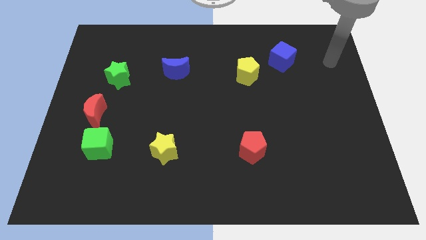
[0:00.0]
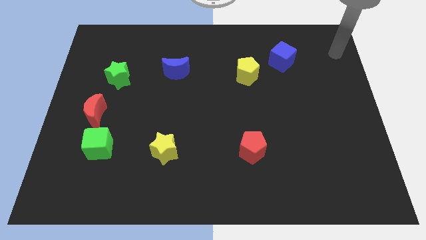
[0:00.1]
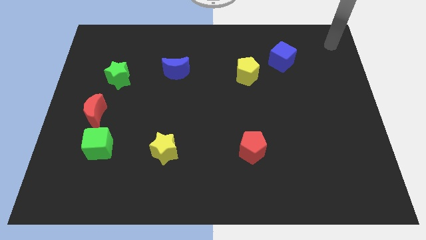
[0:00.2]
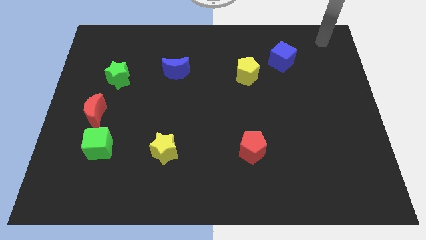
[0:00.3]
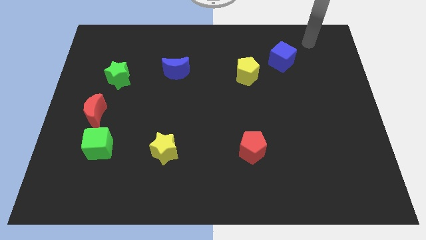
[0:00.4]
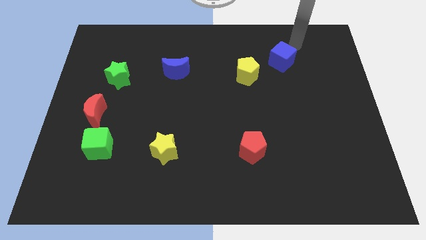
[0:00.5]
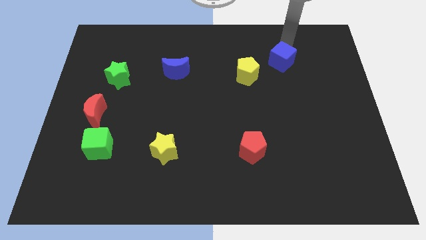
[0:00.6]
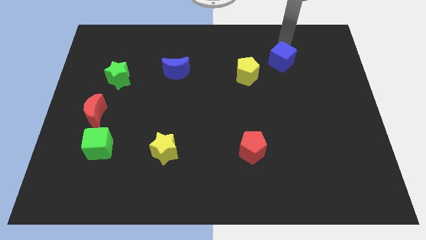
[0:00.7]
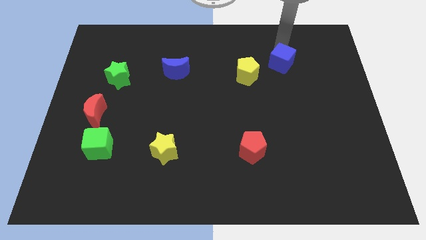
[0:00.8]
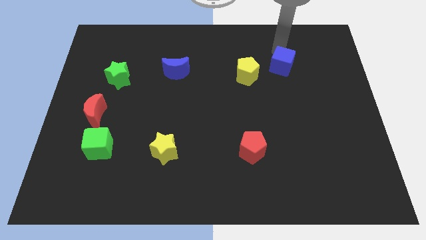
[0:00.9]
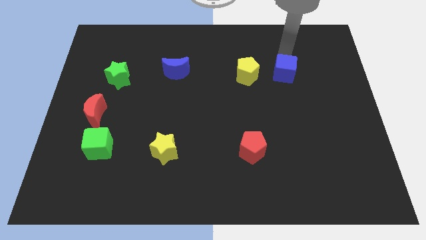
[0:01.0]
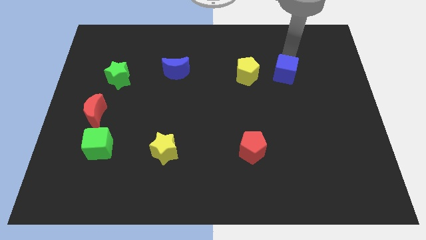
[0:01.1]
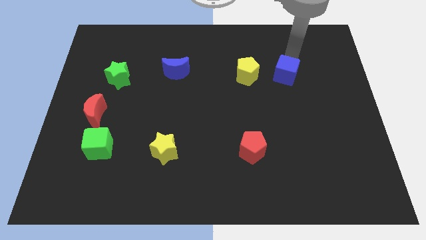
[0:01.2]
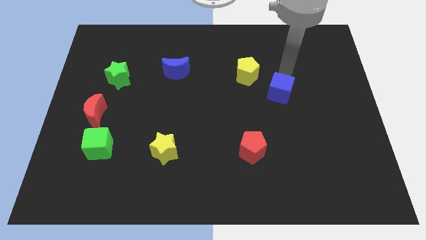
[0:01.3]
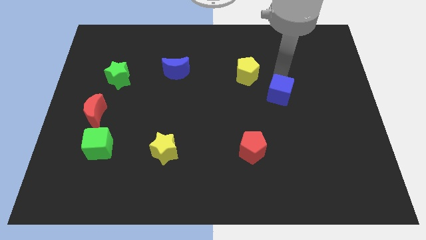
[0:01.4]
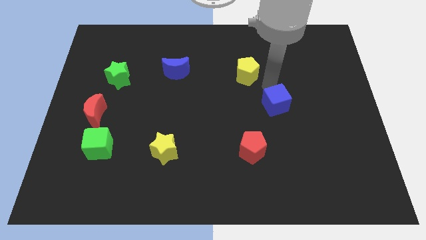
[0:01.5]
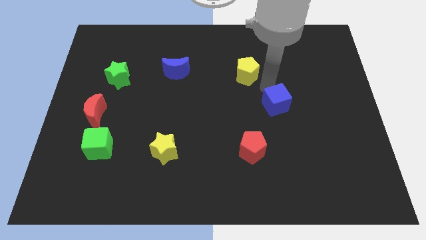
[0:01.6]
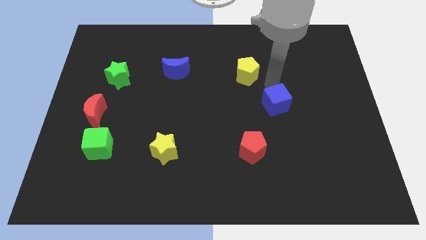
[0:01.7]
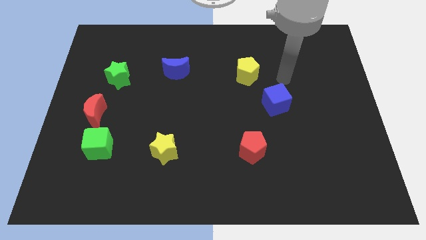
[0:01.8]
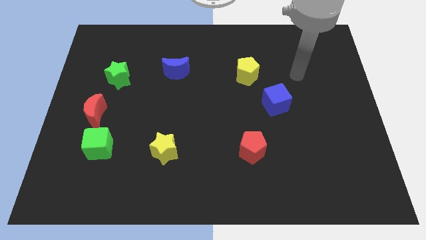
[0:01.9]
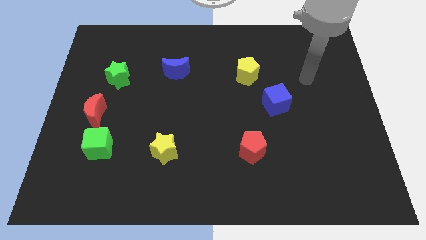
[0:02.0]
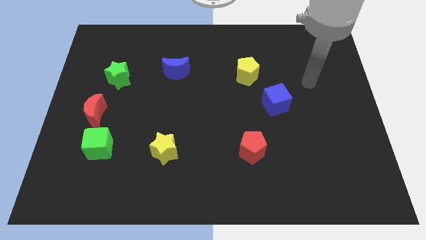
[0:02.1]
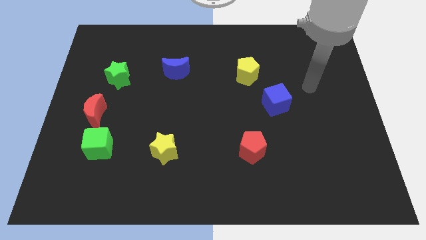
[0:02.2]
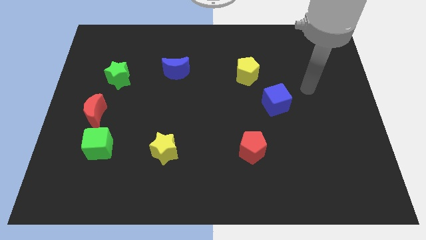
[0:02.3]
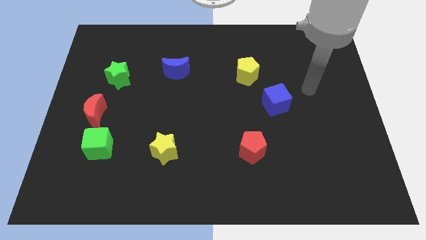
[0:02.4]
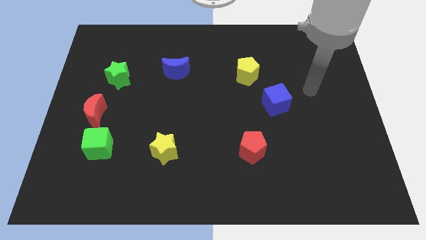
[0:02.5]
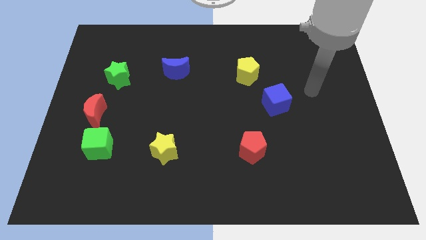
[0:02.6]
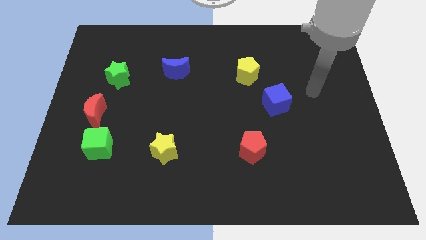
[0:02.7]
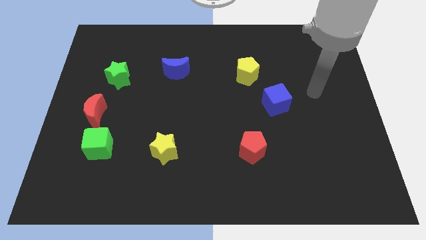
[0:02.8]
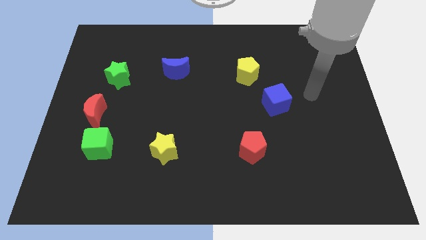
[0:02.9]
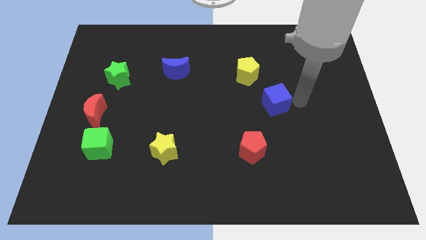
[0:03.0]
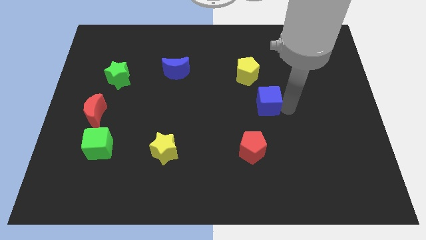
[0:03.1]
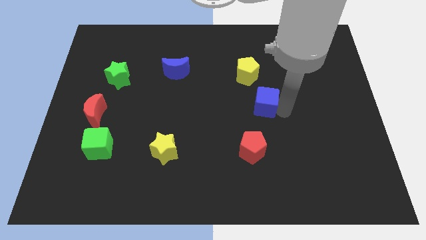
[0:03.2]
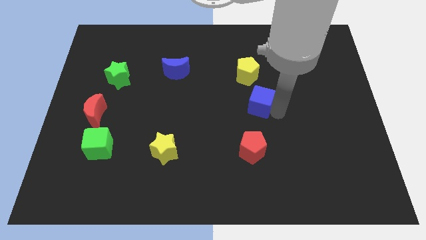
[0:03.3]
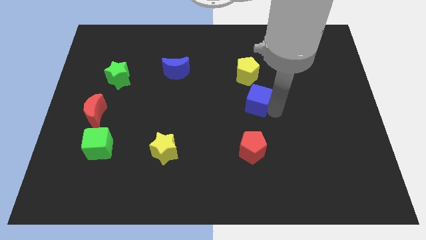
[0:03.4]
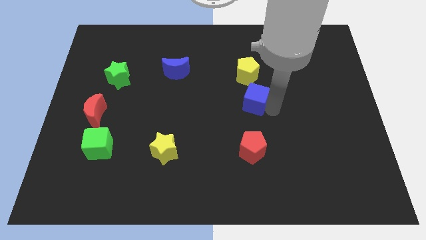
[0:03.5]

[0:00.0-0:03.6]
place the blue cube in between the yellow pentagon and red pentagon

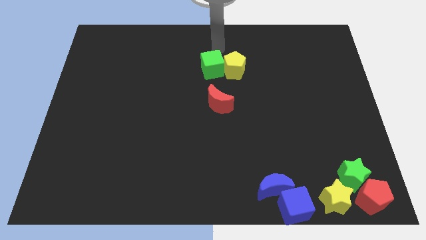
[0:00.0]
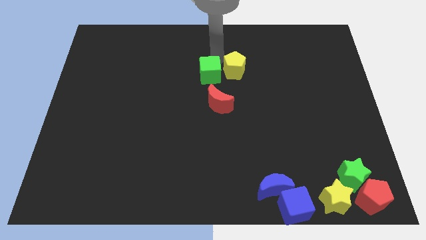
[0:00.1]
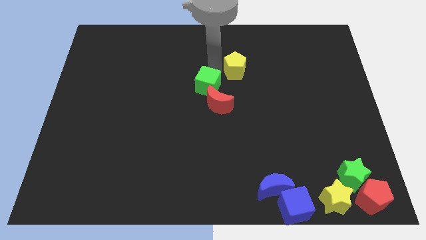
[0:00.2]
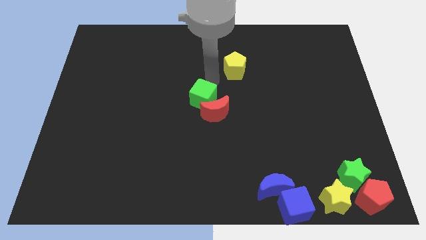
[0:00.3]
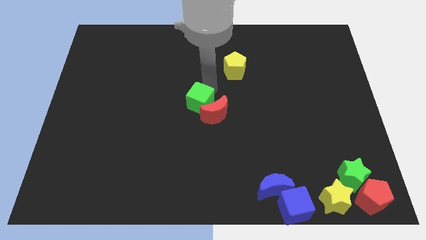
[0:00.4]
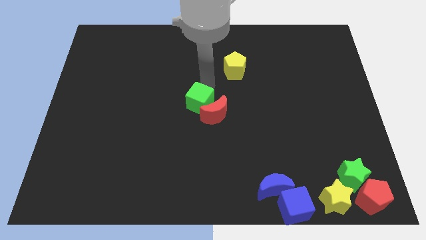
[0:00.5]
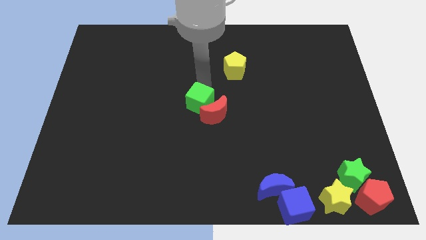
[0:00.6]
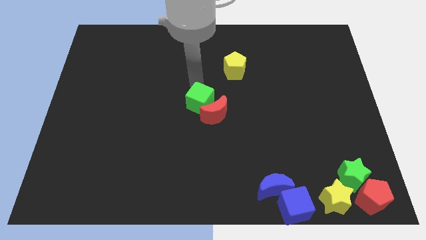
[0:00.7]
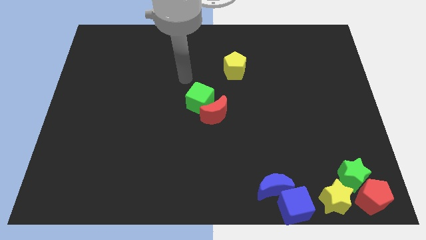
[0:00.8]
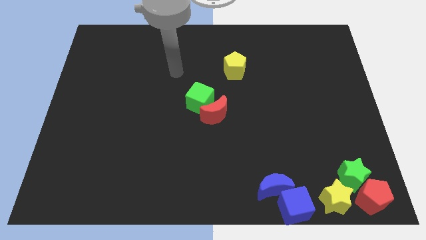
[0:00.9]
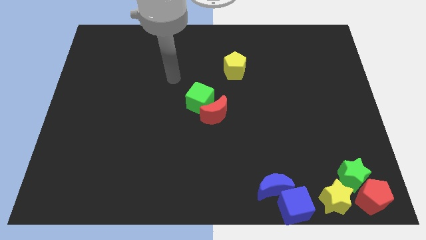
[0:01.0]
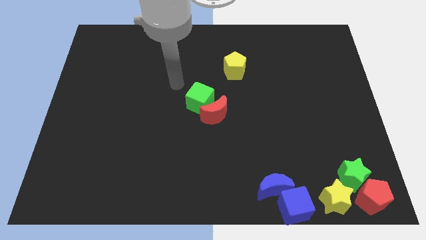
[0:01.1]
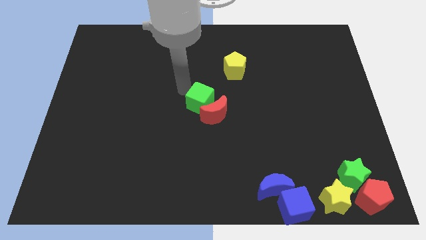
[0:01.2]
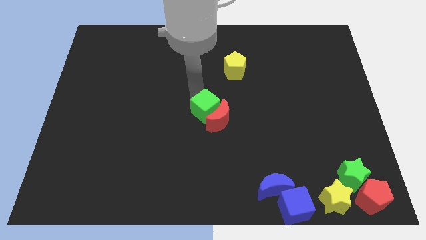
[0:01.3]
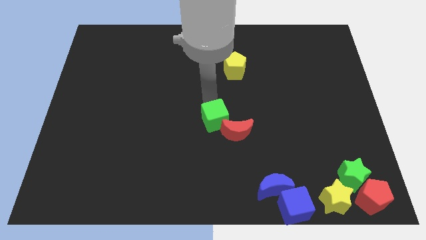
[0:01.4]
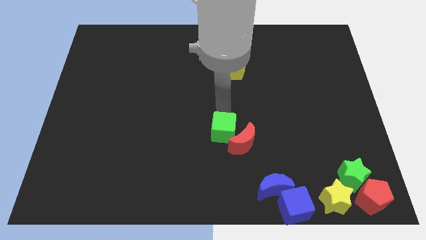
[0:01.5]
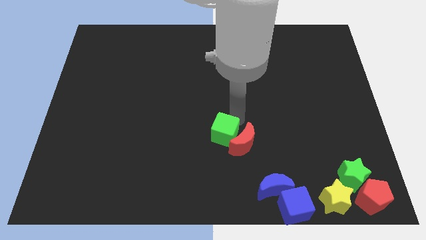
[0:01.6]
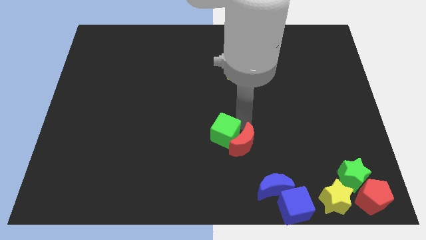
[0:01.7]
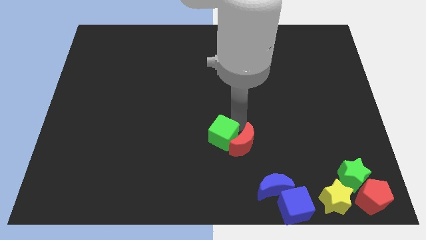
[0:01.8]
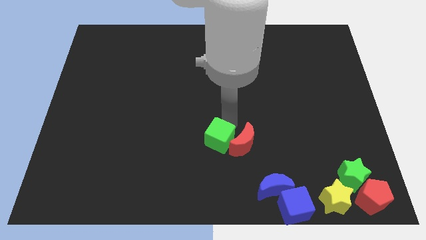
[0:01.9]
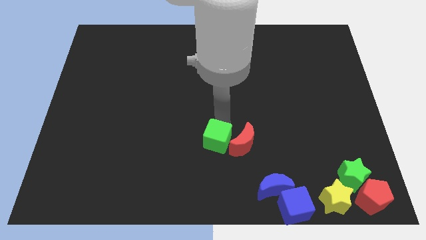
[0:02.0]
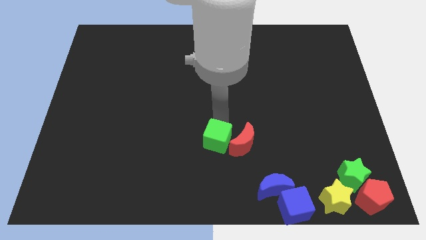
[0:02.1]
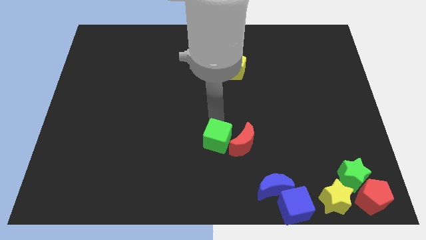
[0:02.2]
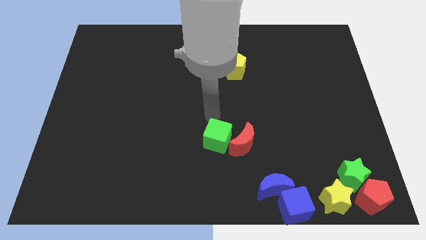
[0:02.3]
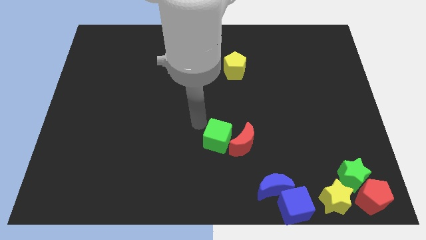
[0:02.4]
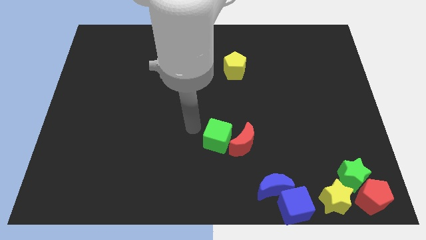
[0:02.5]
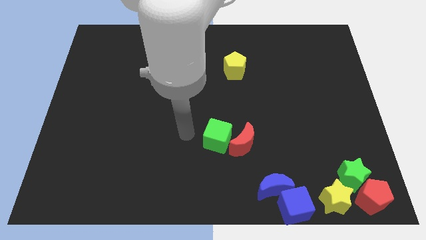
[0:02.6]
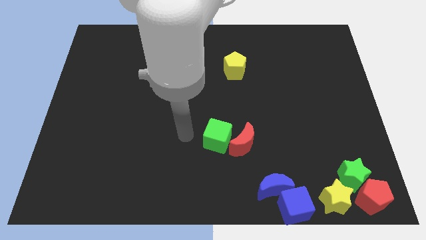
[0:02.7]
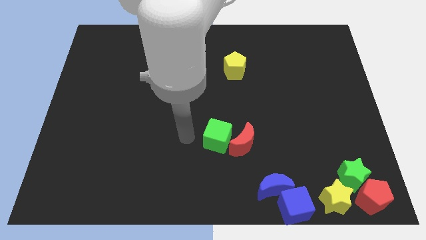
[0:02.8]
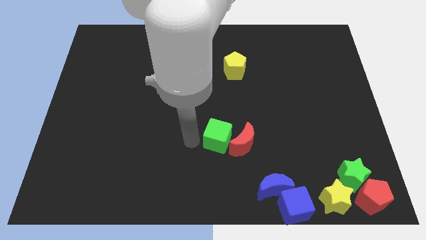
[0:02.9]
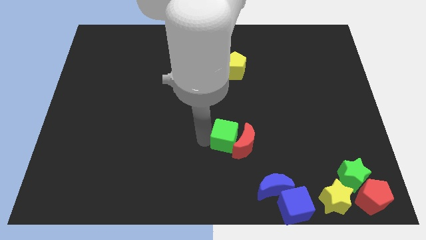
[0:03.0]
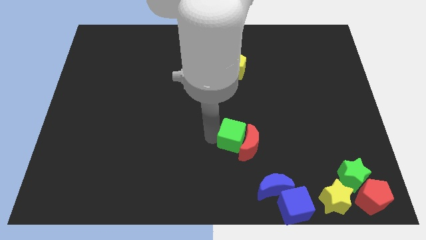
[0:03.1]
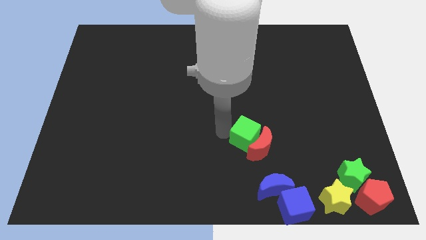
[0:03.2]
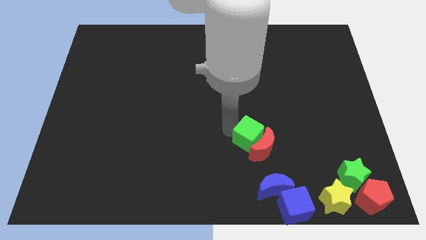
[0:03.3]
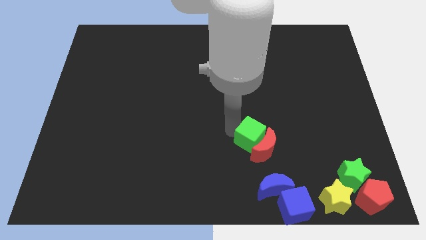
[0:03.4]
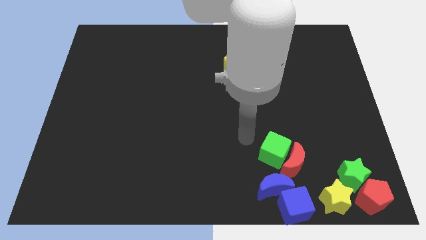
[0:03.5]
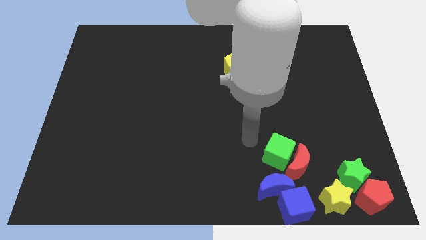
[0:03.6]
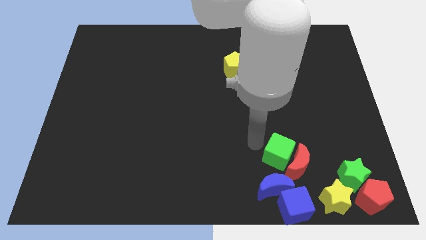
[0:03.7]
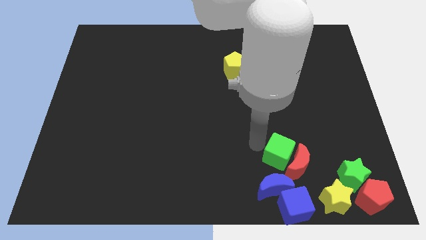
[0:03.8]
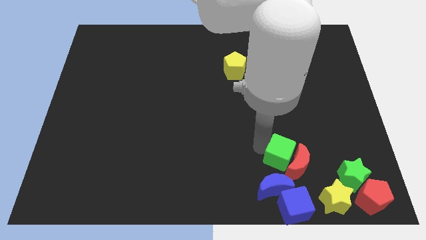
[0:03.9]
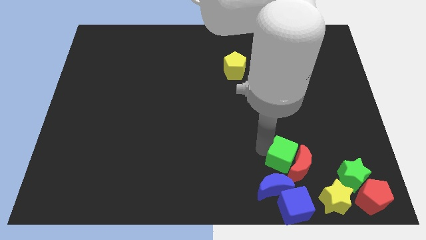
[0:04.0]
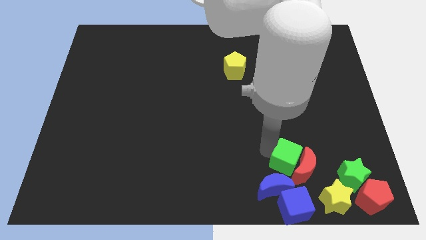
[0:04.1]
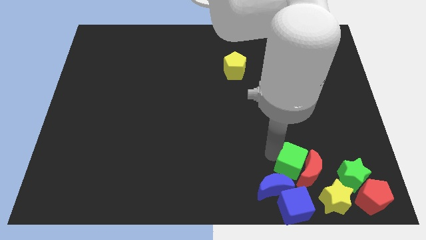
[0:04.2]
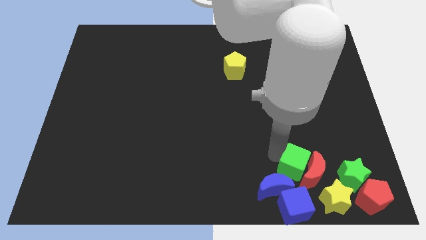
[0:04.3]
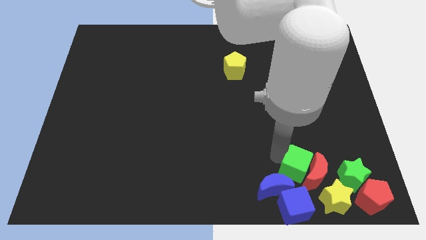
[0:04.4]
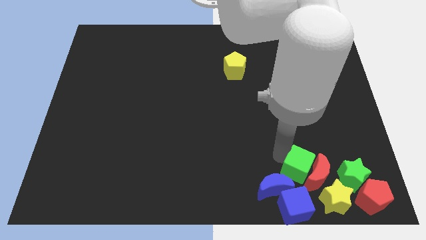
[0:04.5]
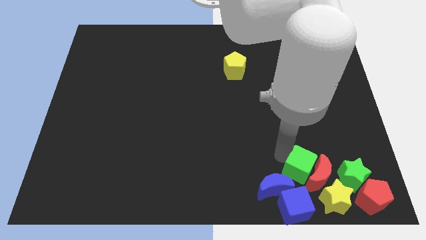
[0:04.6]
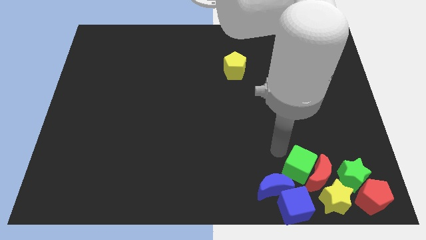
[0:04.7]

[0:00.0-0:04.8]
move the green cube and the red crescent near the bottom side blocks

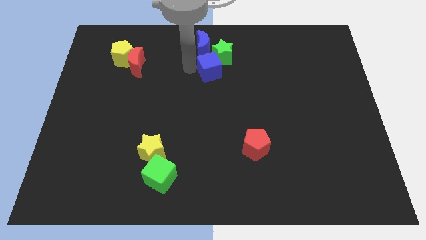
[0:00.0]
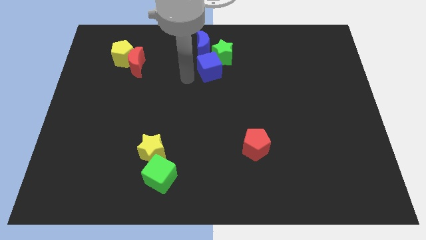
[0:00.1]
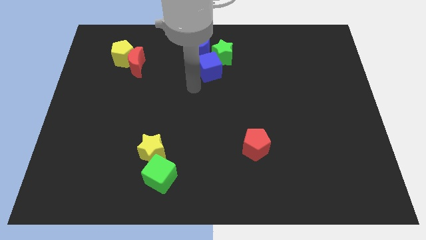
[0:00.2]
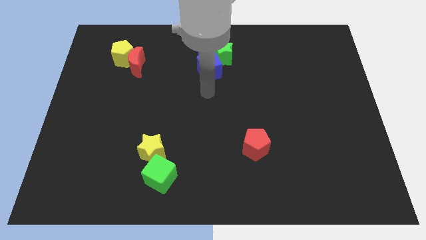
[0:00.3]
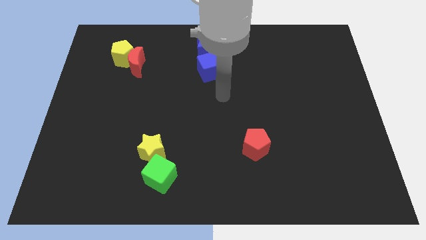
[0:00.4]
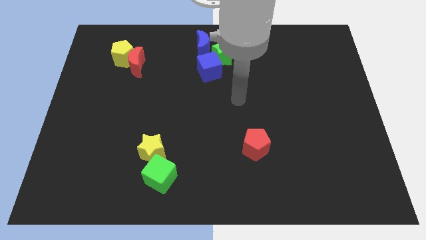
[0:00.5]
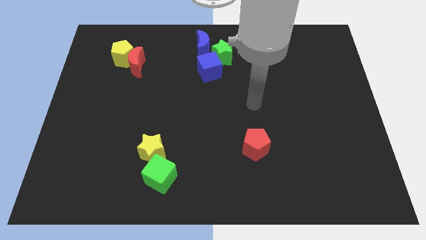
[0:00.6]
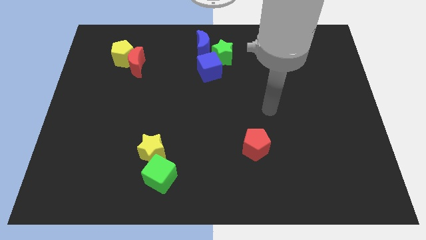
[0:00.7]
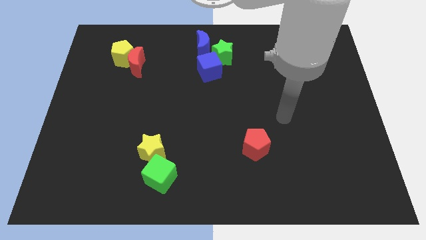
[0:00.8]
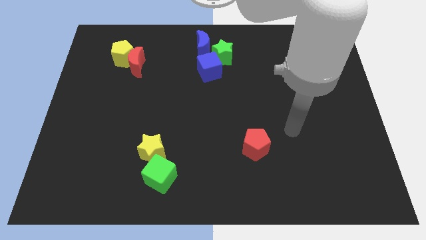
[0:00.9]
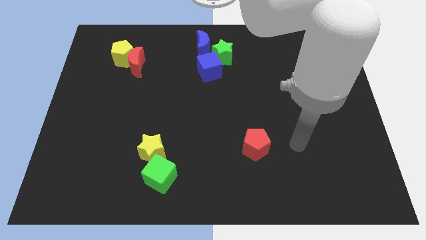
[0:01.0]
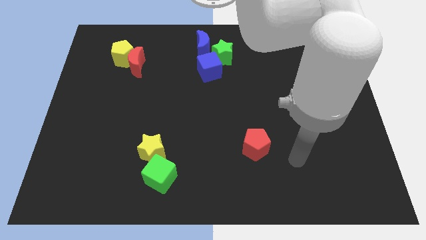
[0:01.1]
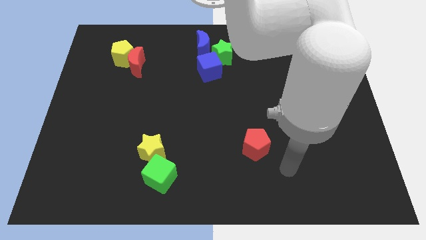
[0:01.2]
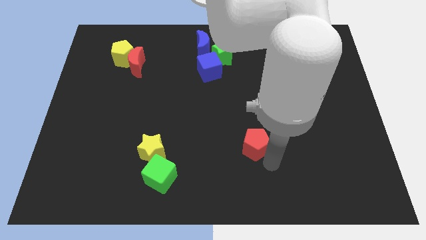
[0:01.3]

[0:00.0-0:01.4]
point the arm below the red pentagon
